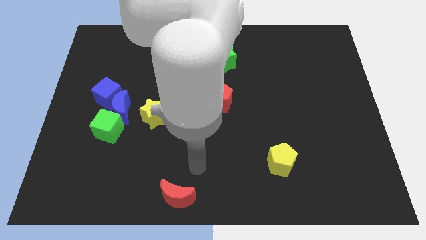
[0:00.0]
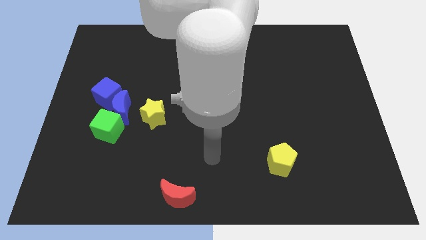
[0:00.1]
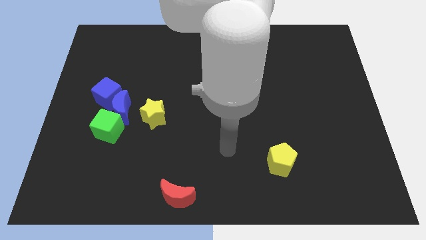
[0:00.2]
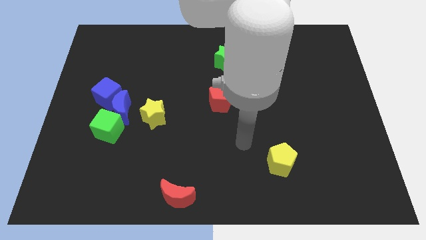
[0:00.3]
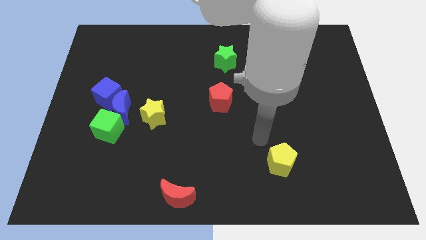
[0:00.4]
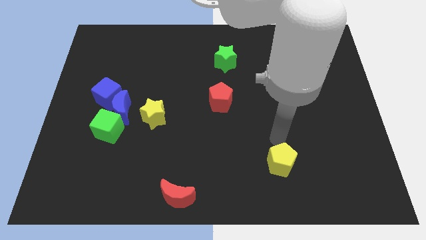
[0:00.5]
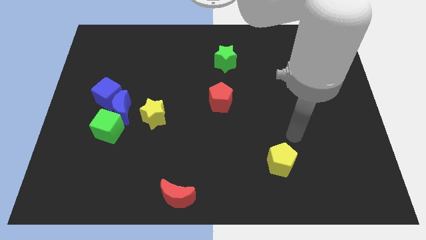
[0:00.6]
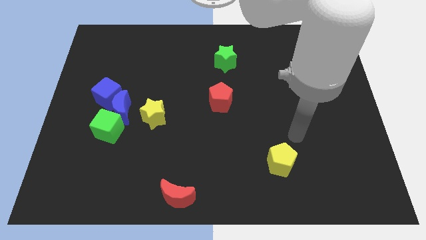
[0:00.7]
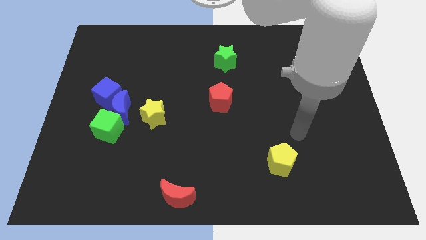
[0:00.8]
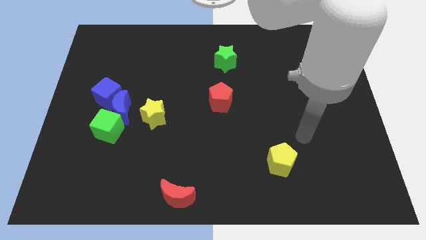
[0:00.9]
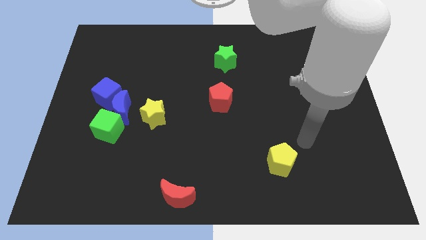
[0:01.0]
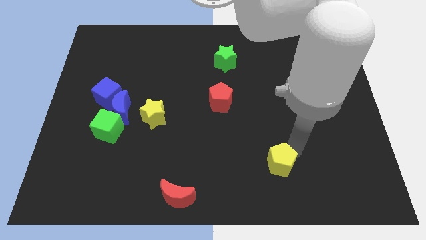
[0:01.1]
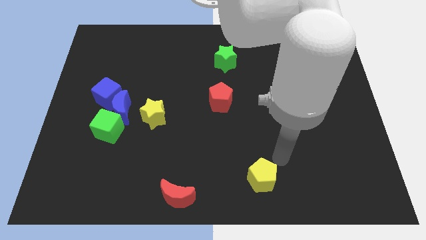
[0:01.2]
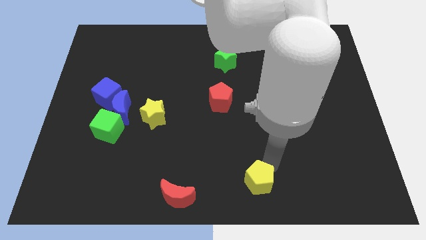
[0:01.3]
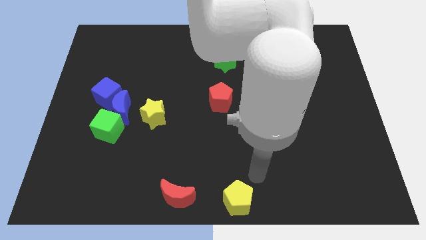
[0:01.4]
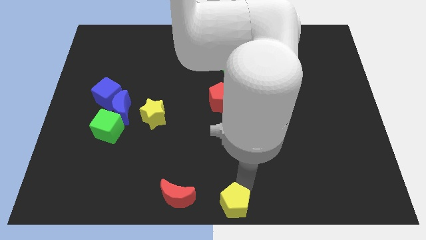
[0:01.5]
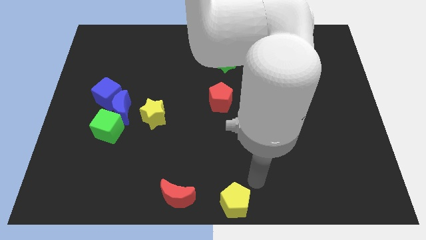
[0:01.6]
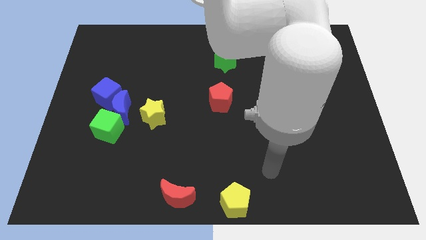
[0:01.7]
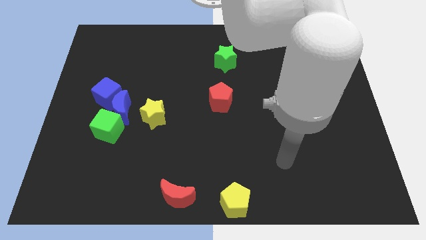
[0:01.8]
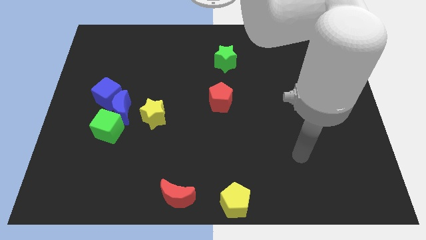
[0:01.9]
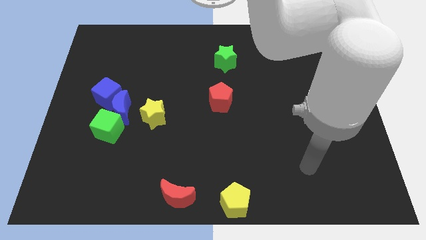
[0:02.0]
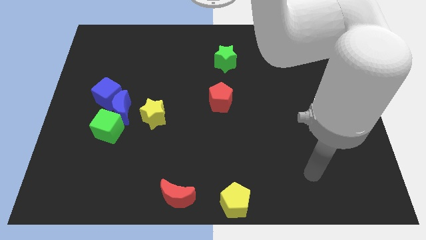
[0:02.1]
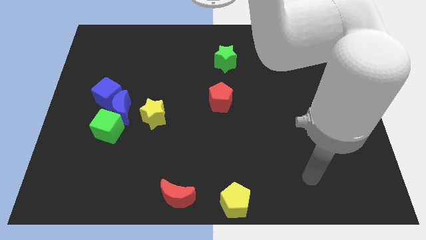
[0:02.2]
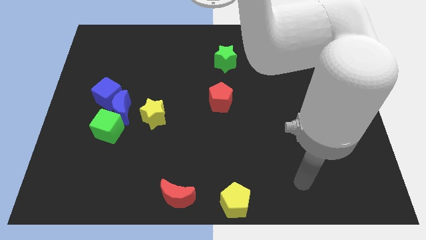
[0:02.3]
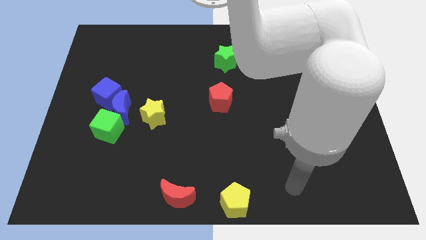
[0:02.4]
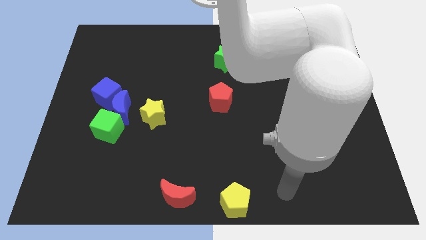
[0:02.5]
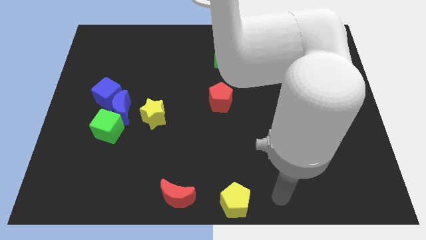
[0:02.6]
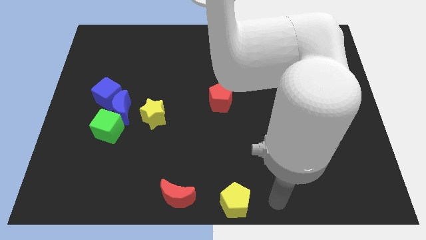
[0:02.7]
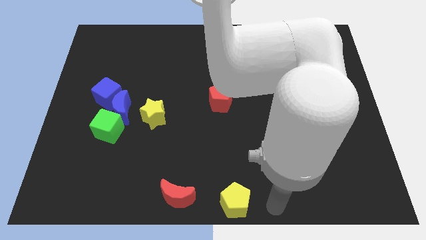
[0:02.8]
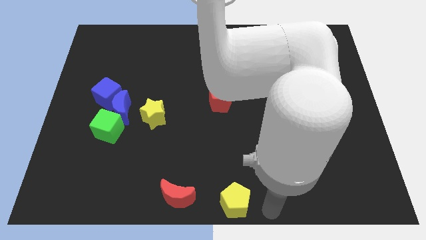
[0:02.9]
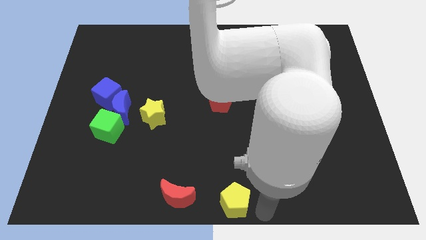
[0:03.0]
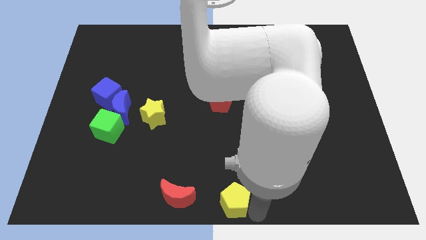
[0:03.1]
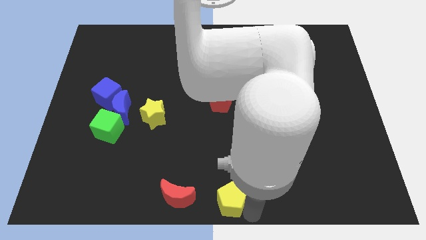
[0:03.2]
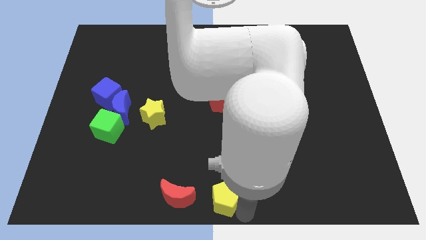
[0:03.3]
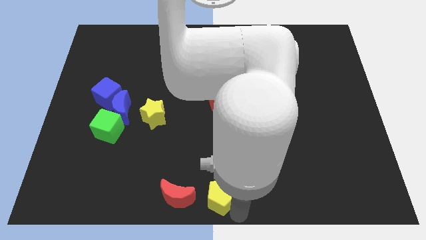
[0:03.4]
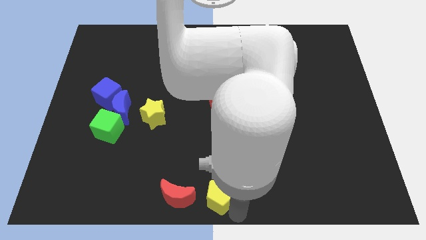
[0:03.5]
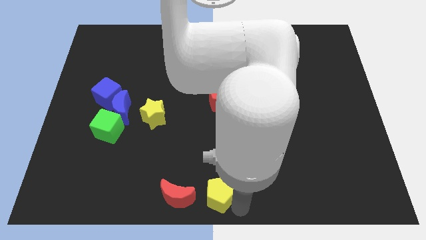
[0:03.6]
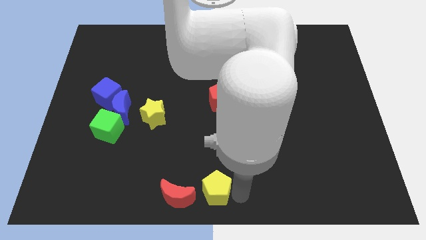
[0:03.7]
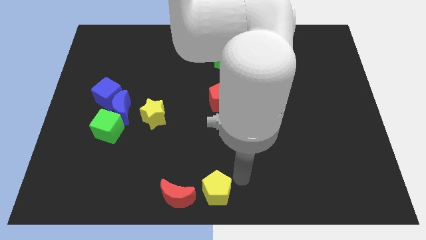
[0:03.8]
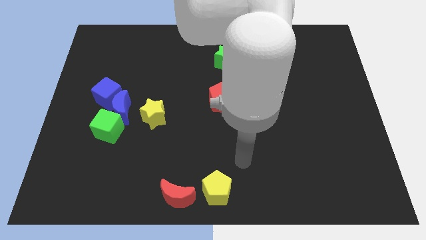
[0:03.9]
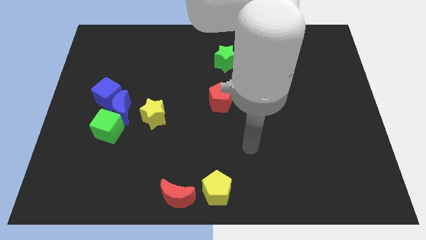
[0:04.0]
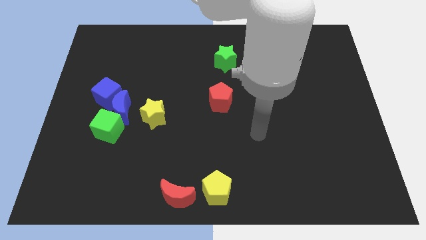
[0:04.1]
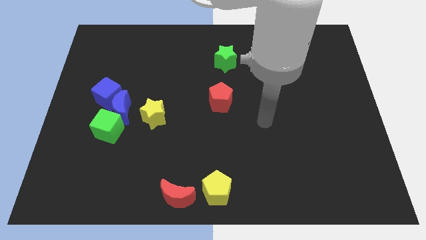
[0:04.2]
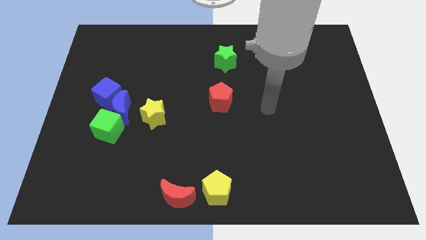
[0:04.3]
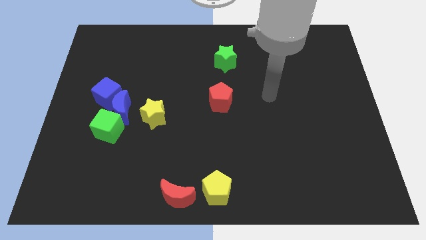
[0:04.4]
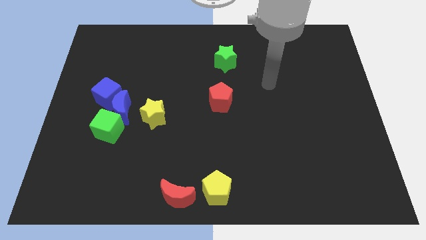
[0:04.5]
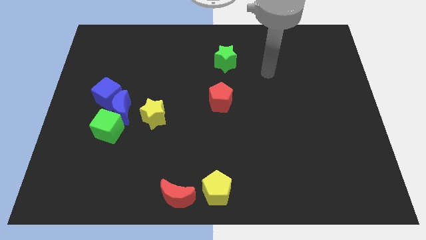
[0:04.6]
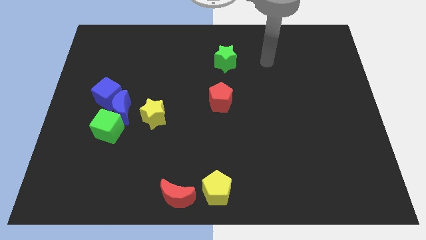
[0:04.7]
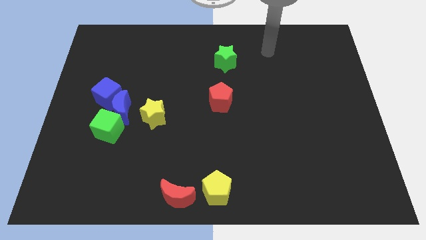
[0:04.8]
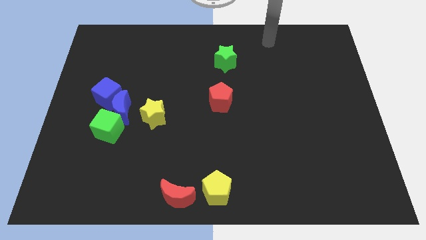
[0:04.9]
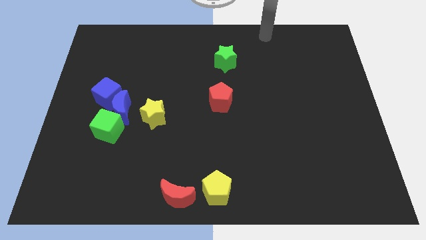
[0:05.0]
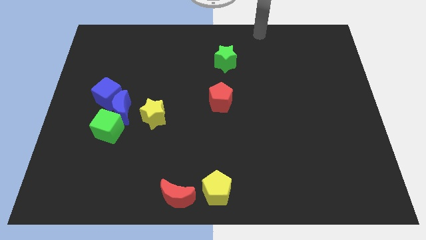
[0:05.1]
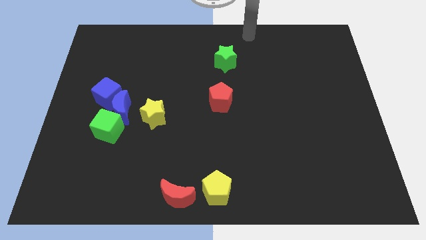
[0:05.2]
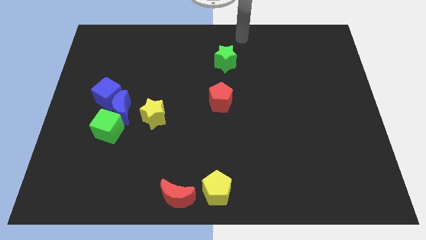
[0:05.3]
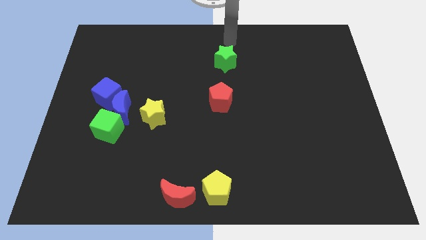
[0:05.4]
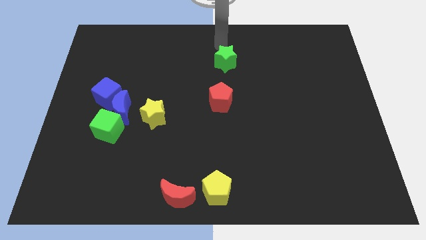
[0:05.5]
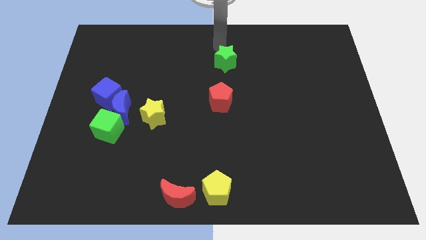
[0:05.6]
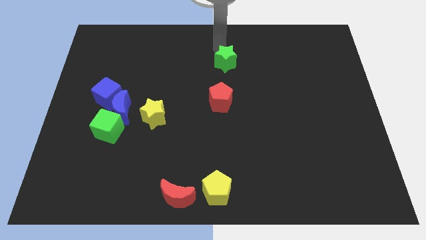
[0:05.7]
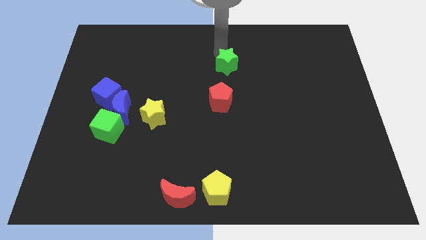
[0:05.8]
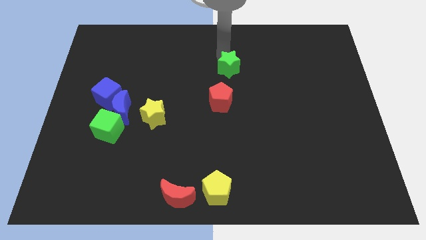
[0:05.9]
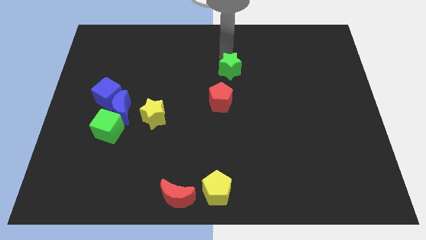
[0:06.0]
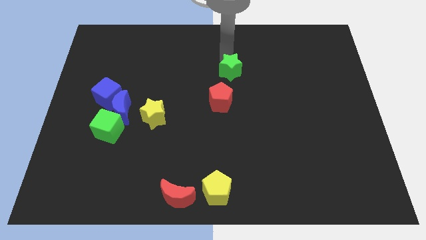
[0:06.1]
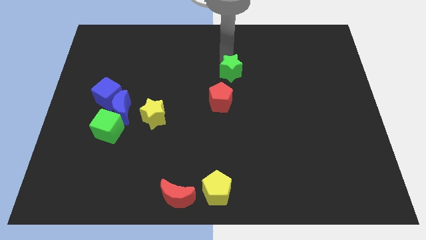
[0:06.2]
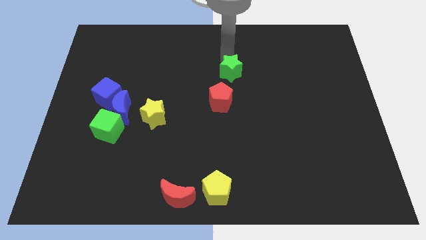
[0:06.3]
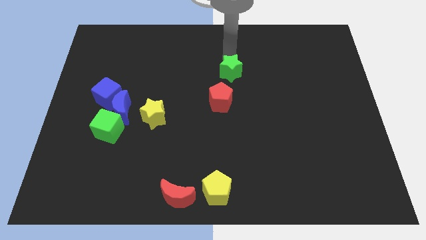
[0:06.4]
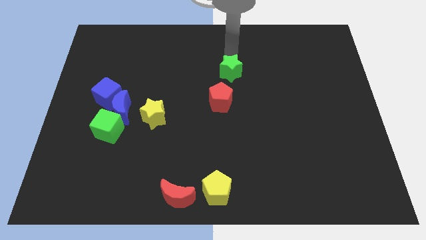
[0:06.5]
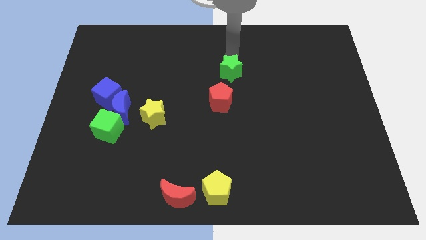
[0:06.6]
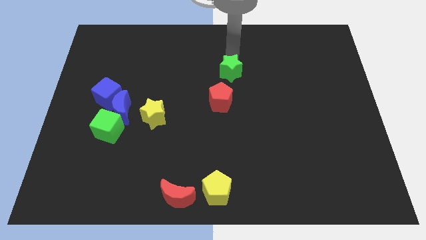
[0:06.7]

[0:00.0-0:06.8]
move the yellow pentagon to the right side of the red crescent

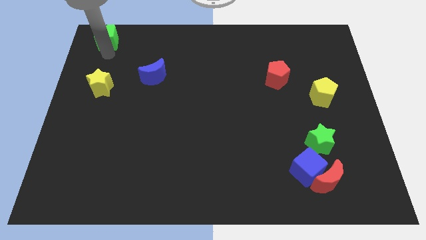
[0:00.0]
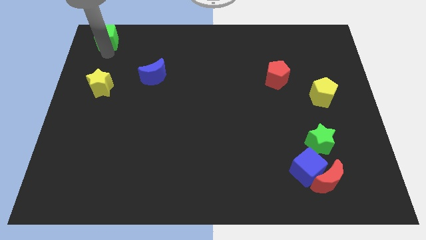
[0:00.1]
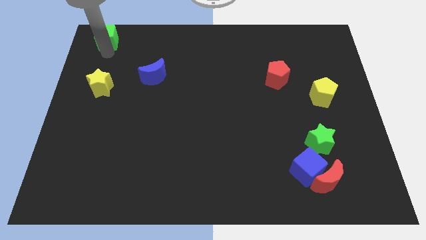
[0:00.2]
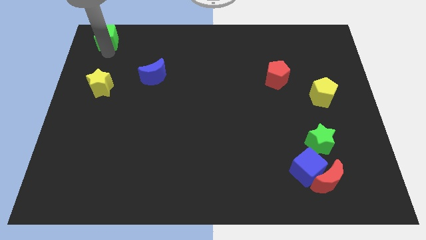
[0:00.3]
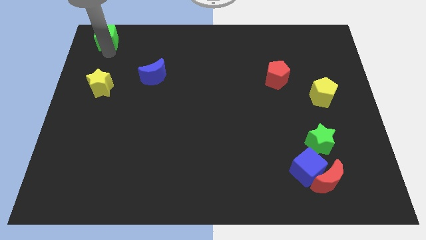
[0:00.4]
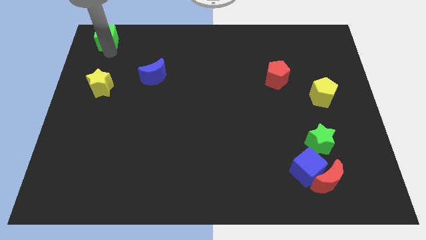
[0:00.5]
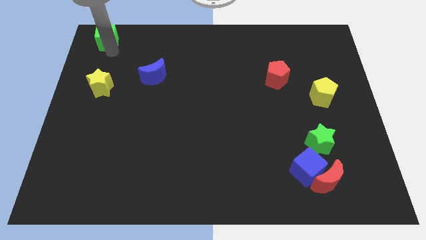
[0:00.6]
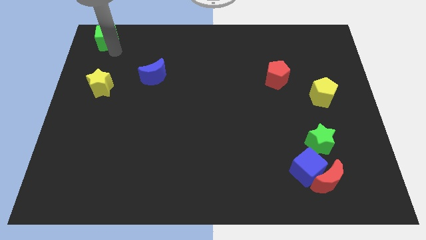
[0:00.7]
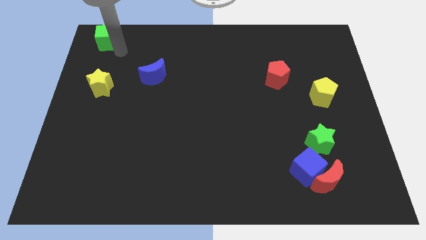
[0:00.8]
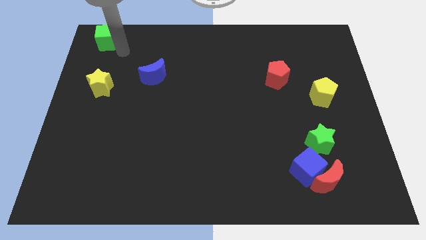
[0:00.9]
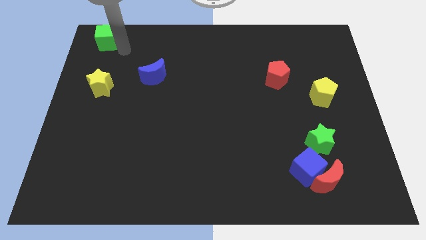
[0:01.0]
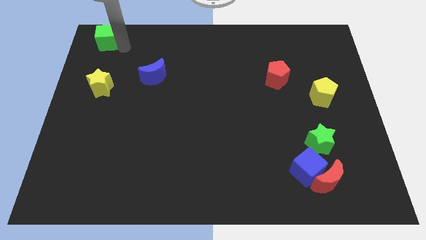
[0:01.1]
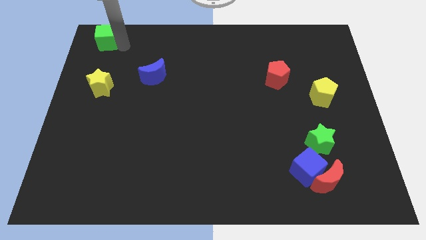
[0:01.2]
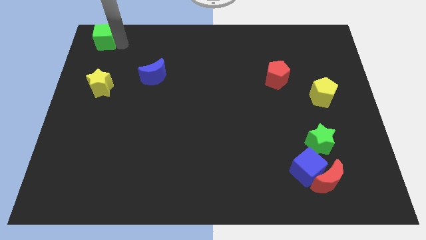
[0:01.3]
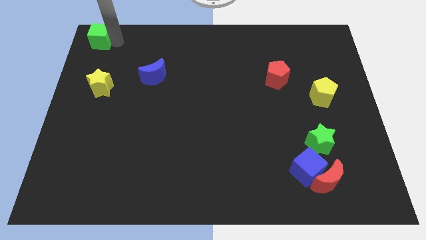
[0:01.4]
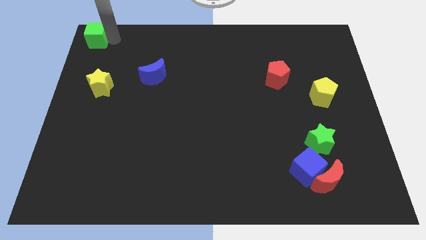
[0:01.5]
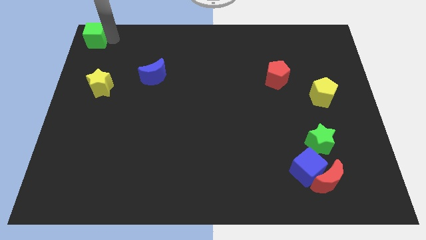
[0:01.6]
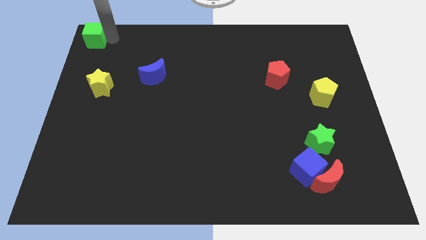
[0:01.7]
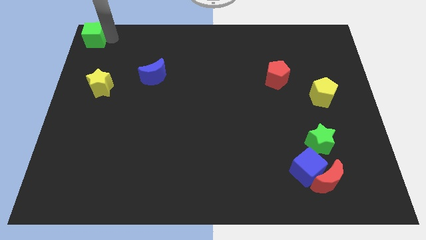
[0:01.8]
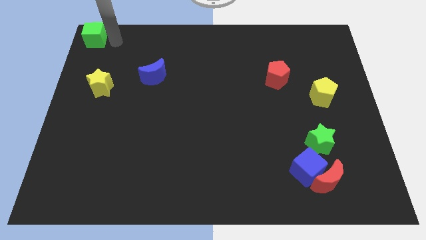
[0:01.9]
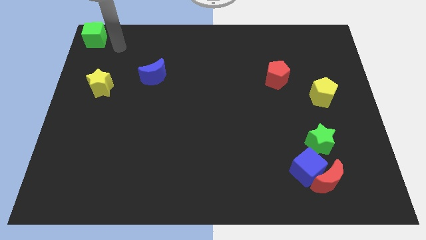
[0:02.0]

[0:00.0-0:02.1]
slide the green cube slightly to the left
